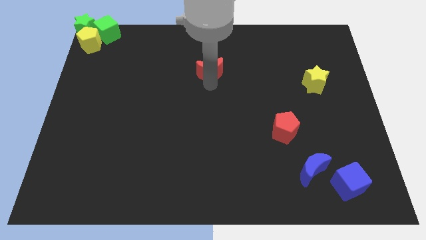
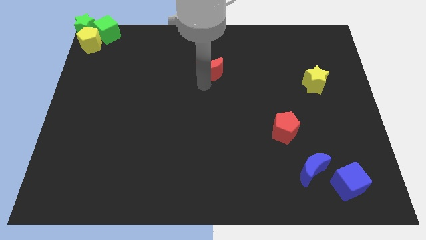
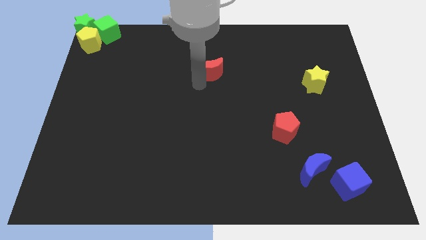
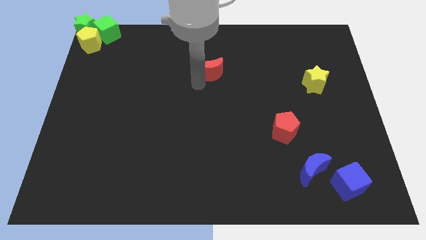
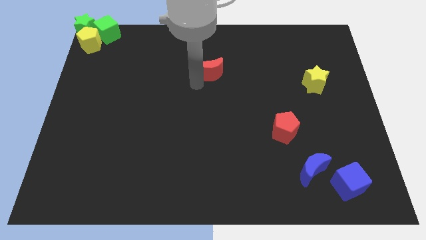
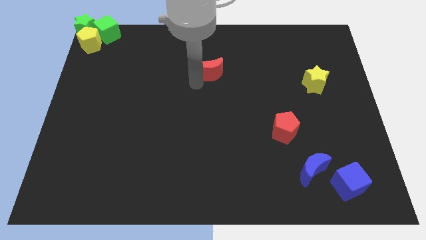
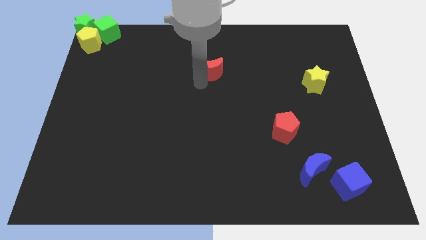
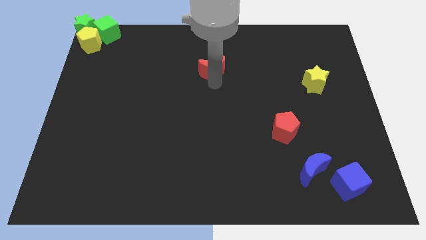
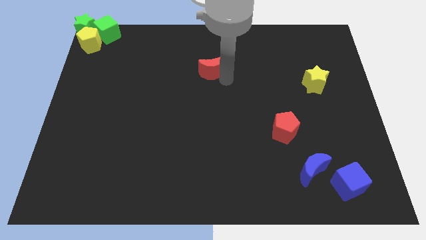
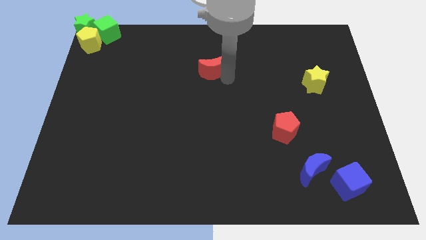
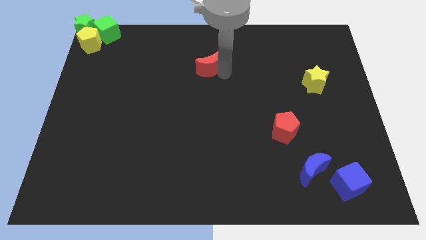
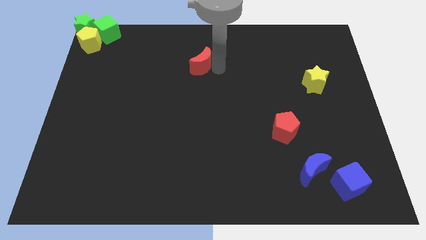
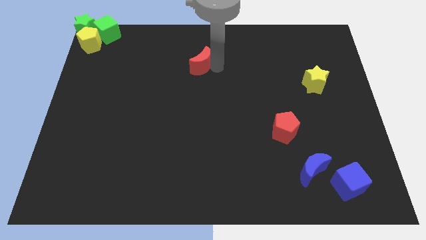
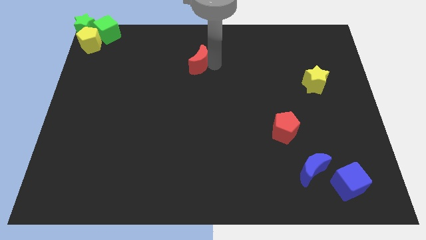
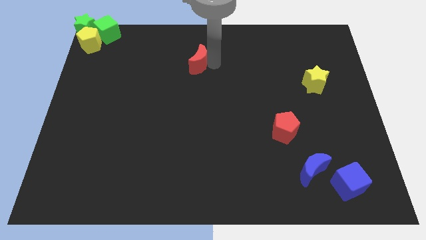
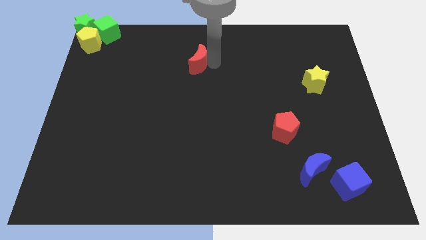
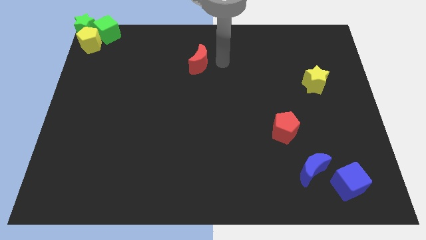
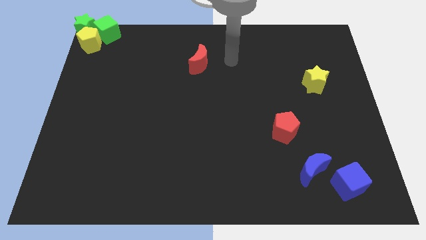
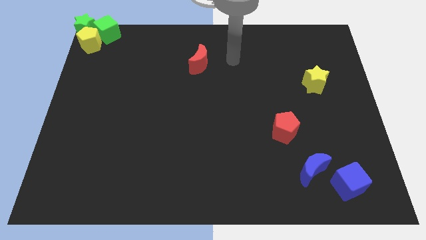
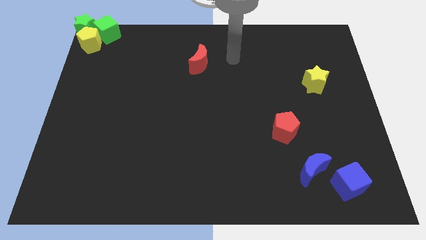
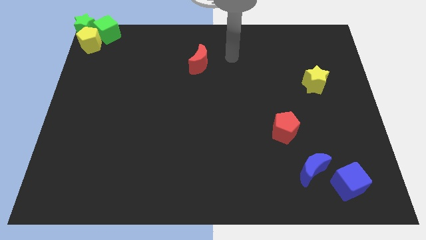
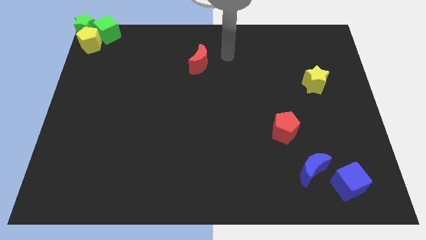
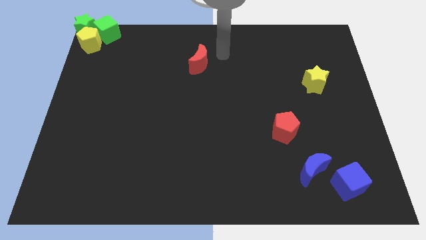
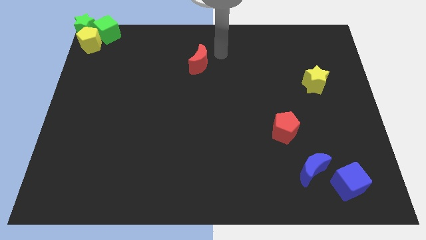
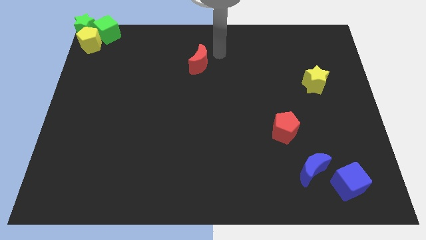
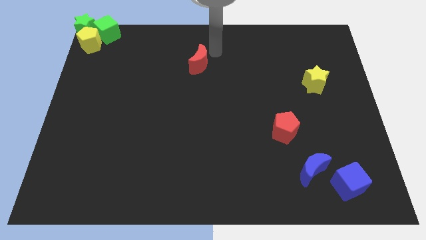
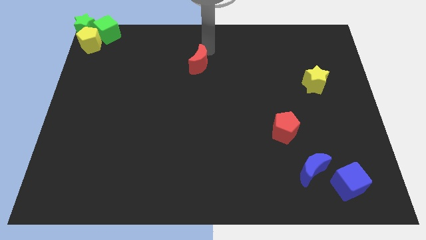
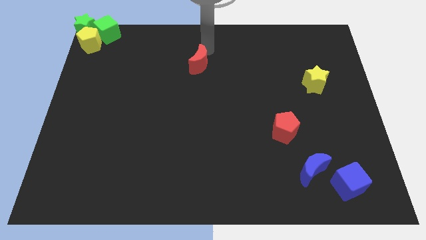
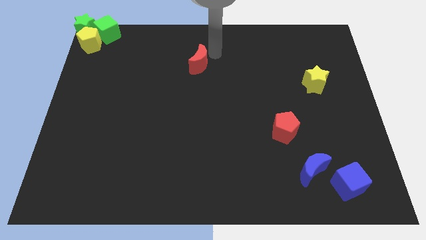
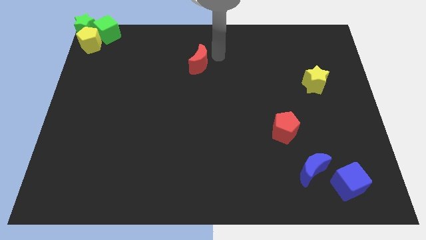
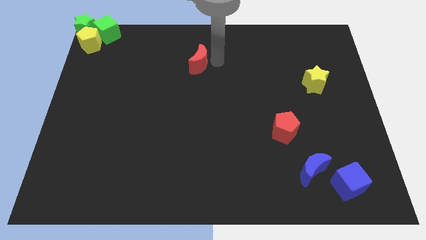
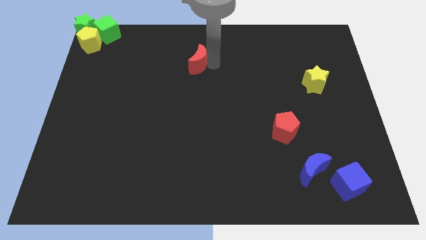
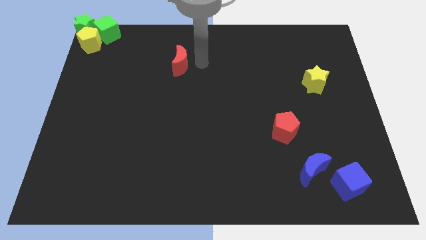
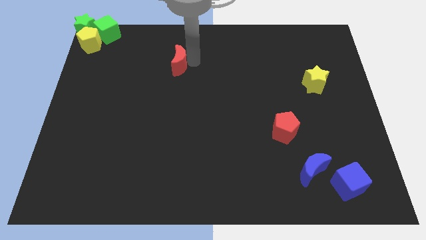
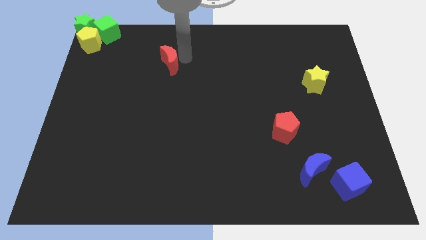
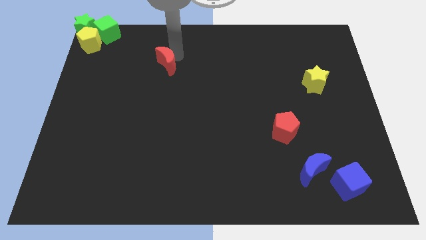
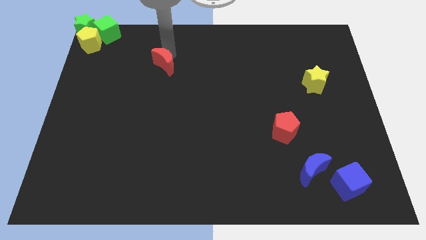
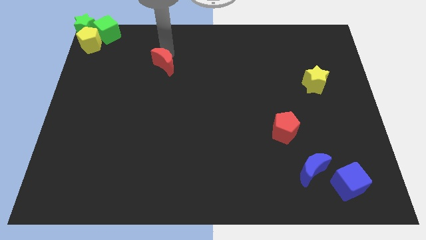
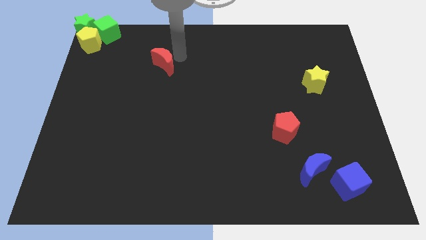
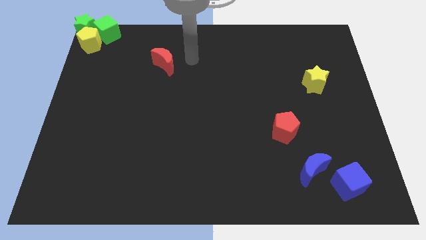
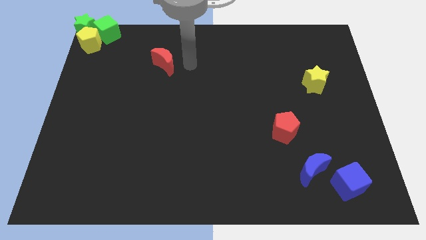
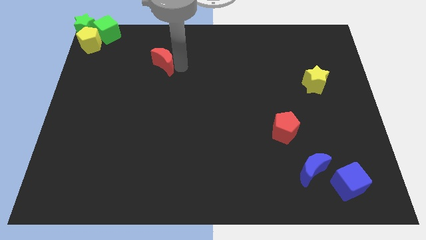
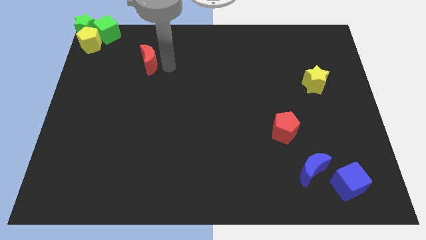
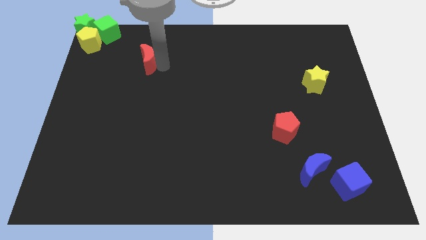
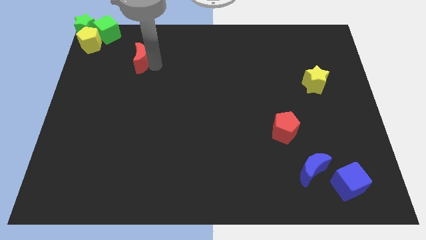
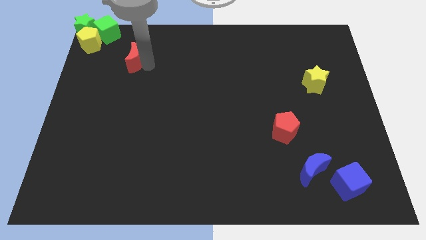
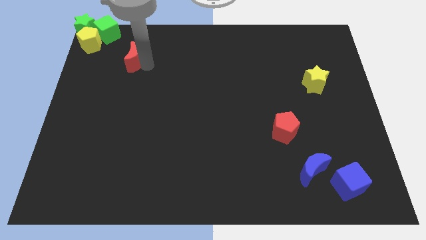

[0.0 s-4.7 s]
move the red moon towards the top left

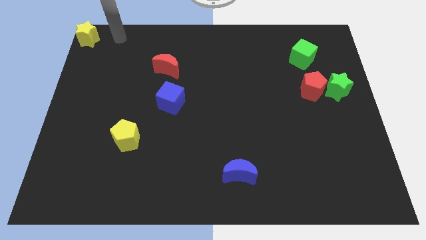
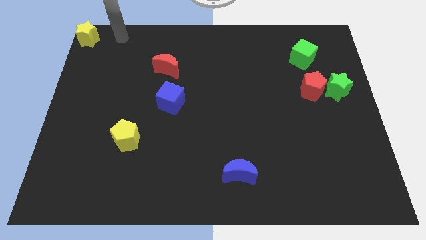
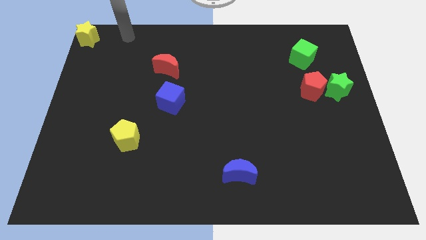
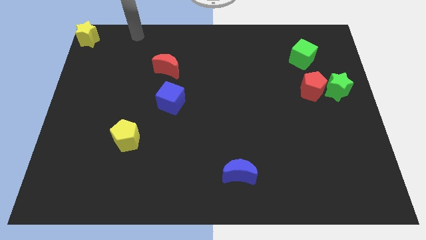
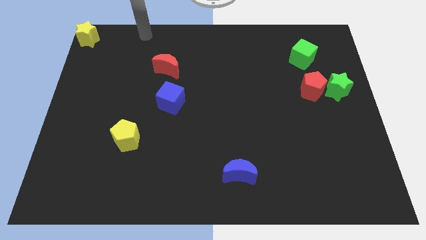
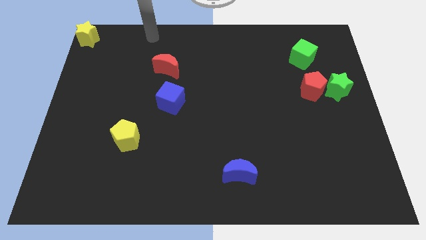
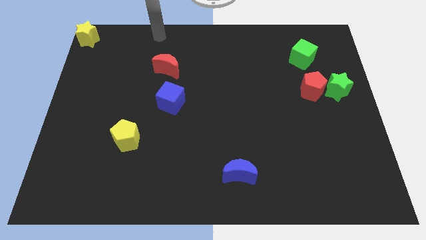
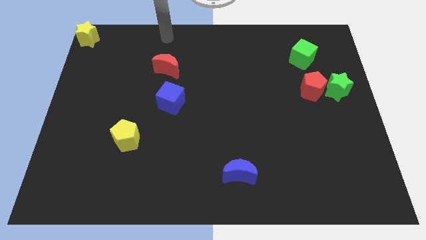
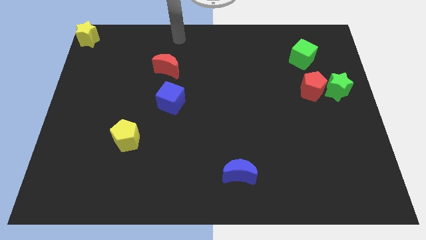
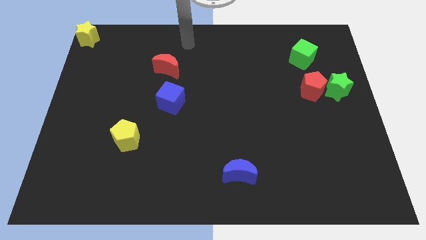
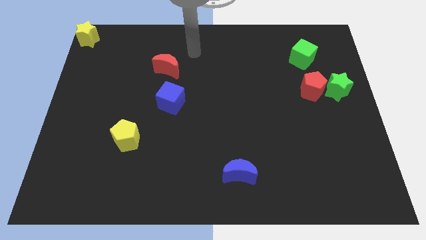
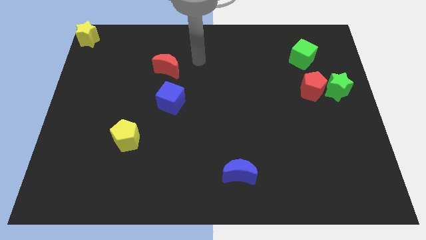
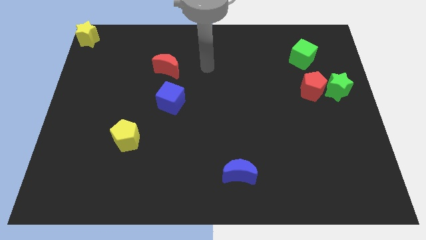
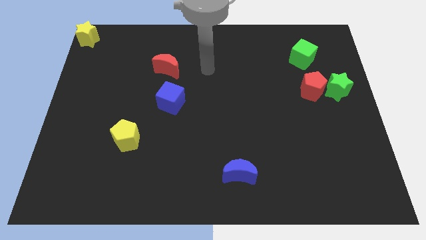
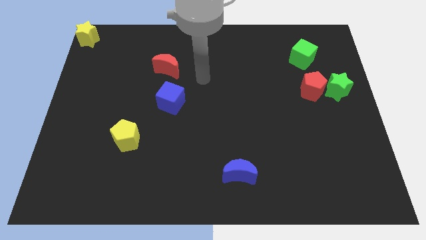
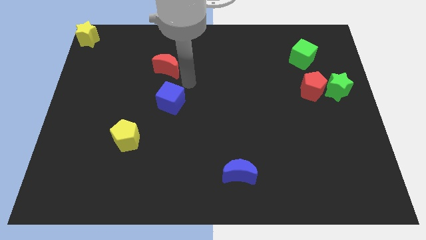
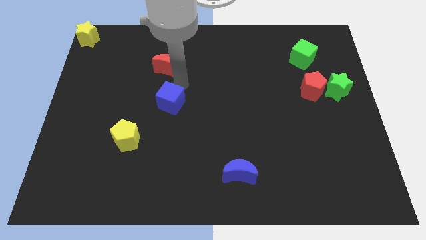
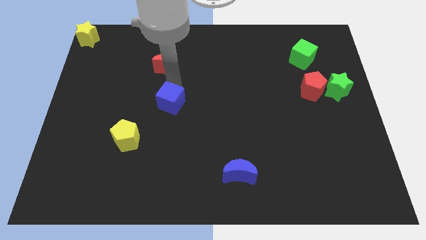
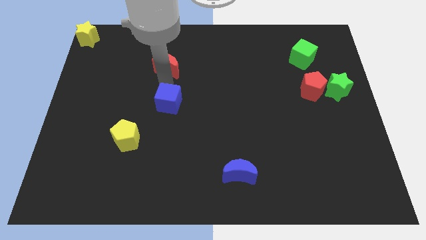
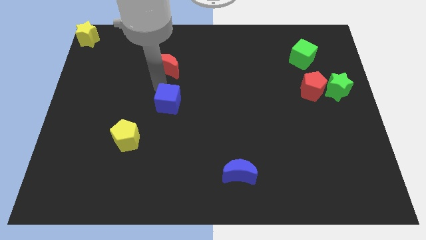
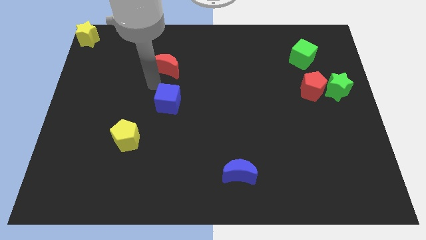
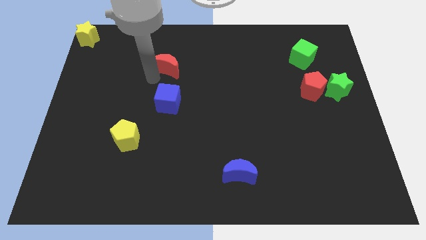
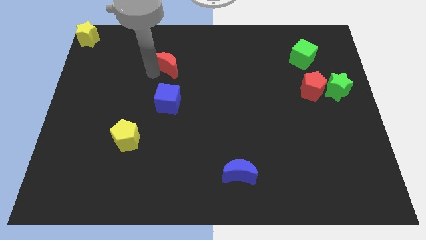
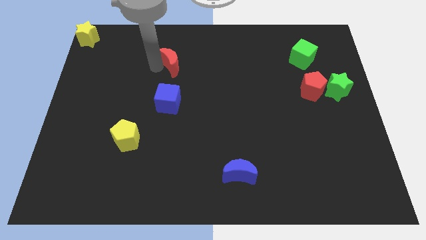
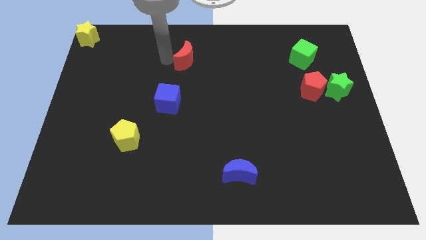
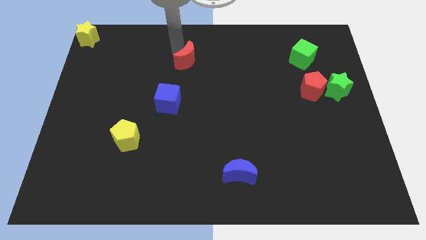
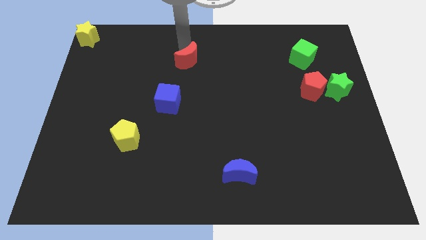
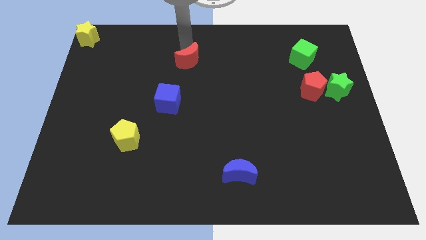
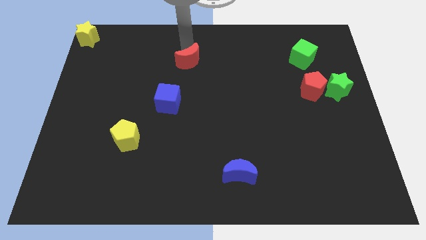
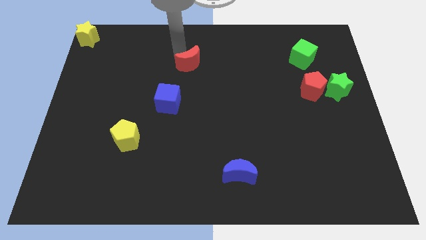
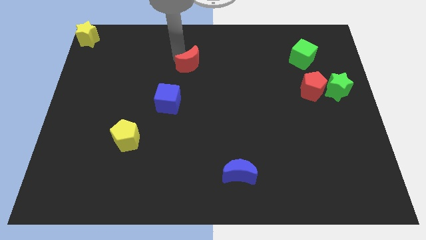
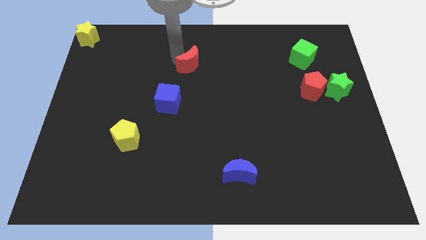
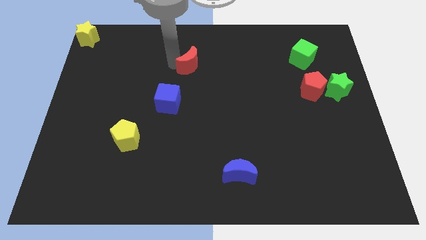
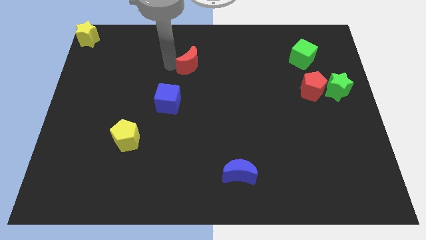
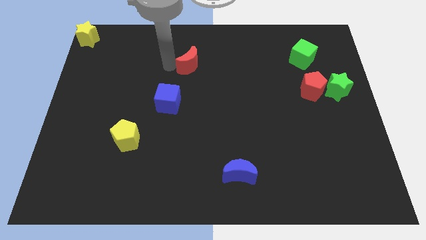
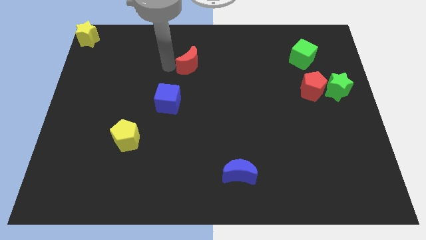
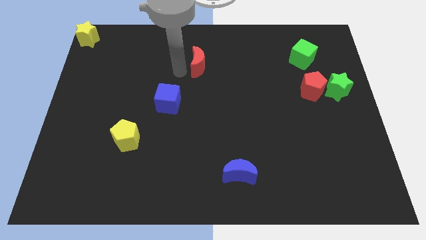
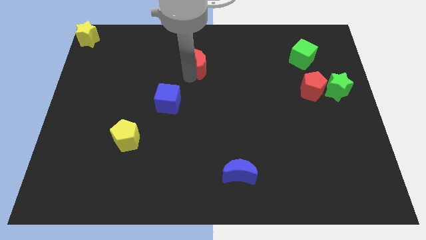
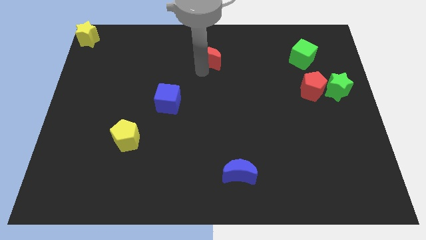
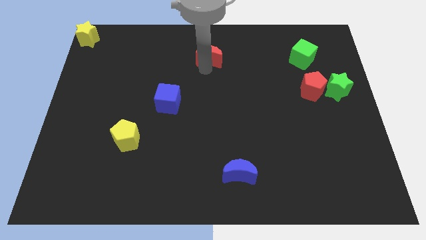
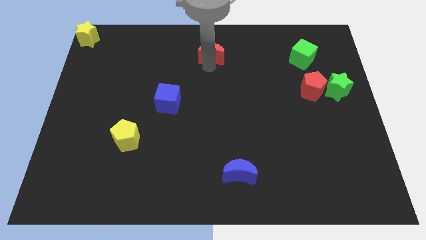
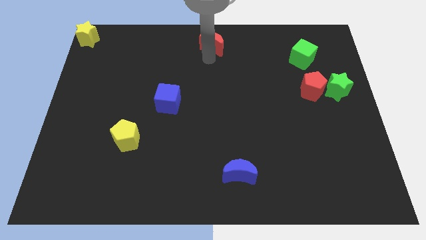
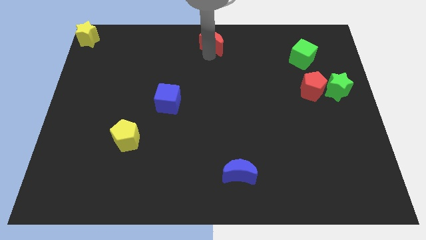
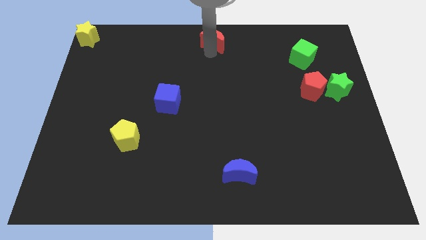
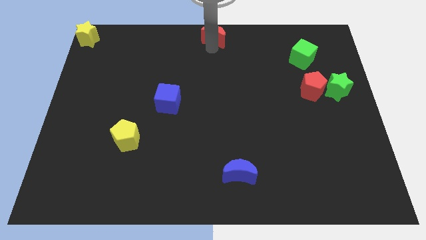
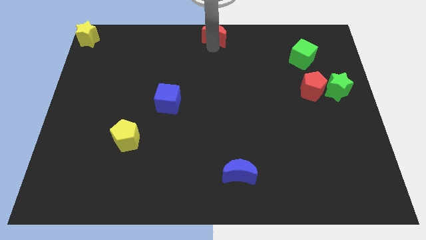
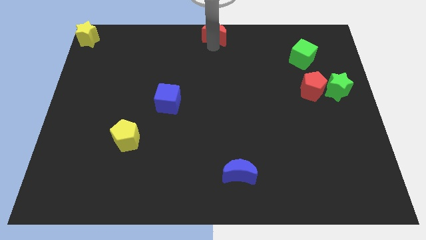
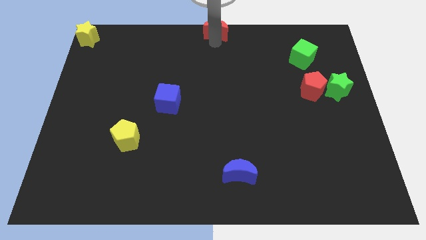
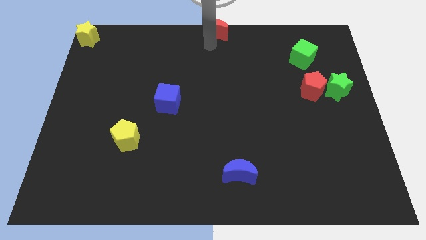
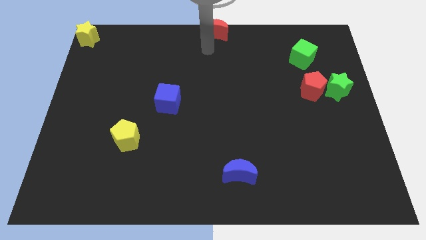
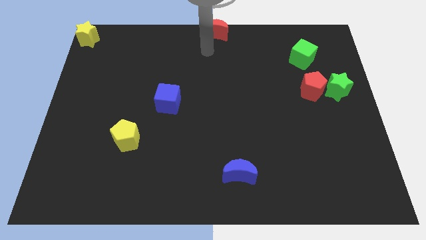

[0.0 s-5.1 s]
place the red crescent at the top center of the board
